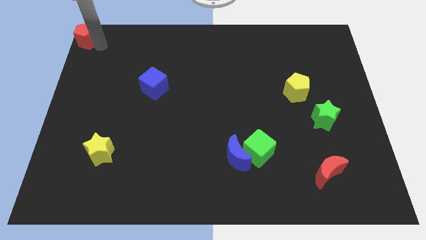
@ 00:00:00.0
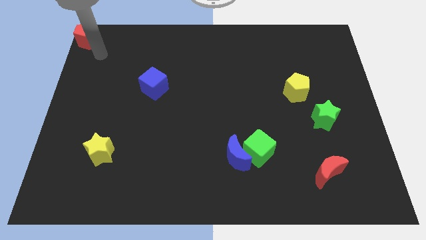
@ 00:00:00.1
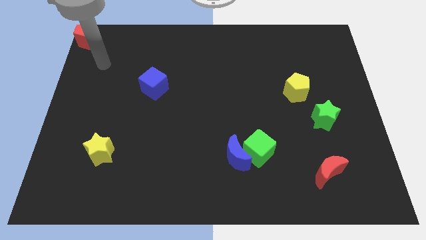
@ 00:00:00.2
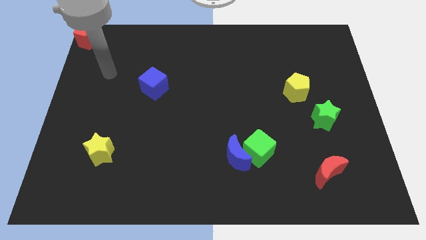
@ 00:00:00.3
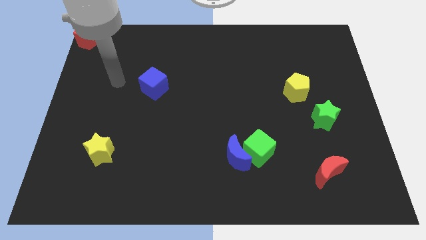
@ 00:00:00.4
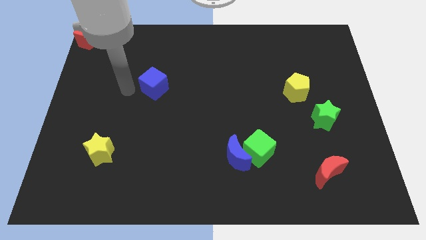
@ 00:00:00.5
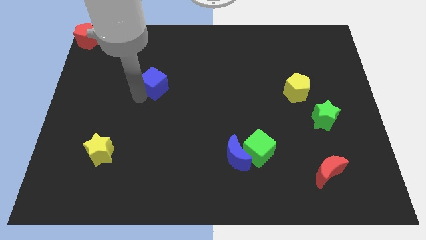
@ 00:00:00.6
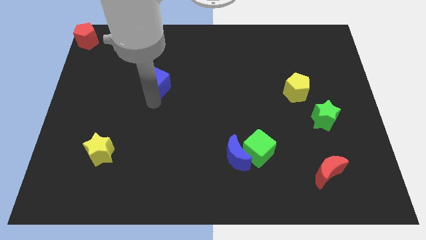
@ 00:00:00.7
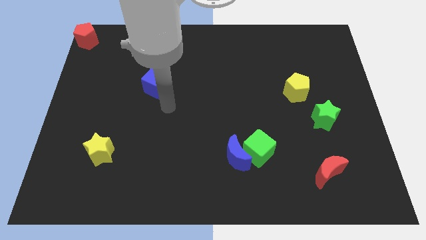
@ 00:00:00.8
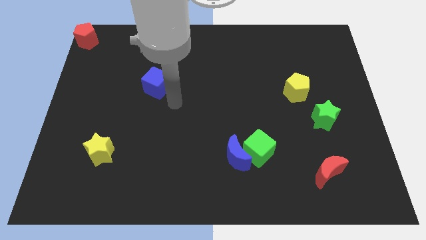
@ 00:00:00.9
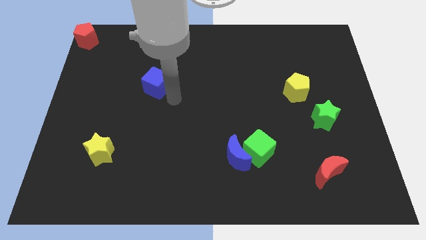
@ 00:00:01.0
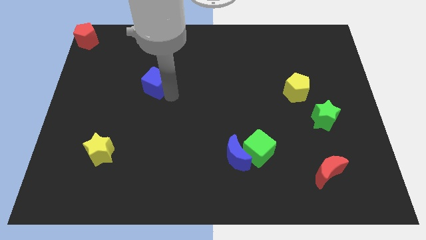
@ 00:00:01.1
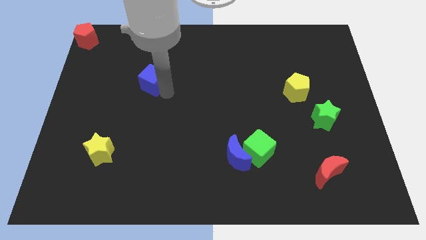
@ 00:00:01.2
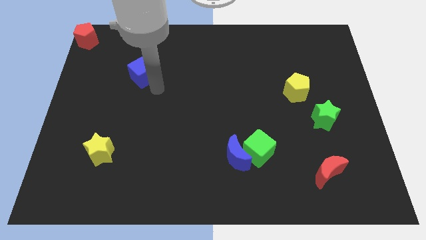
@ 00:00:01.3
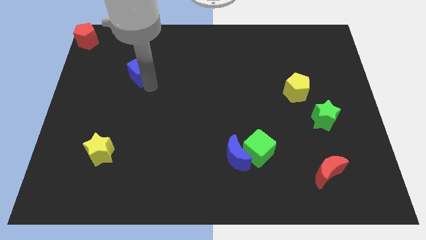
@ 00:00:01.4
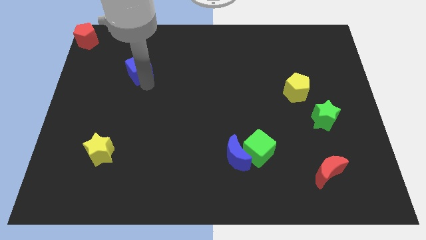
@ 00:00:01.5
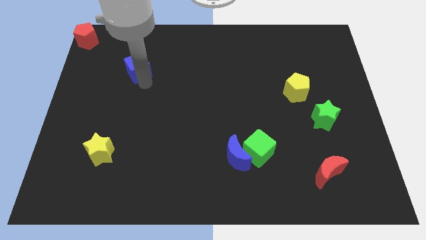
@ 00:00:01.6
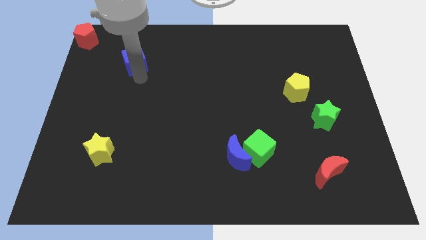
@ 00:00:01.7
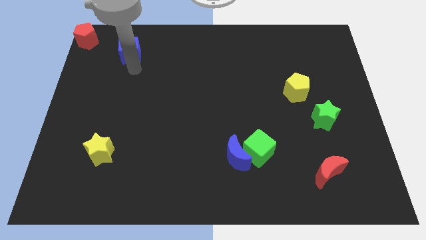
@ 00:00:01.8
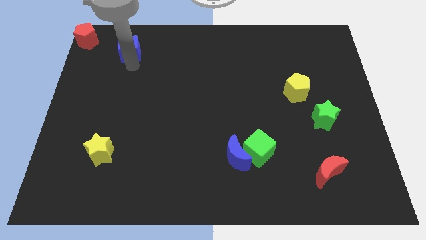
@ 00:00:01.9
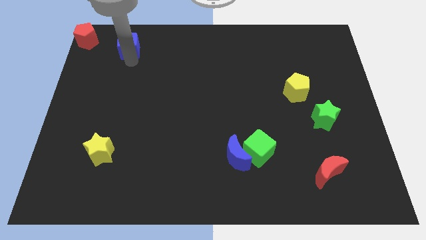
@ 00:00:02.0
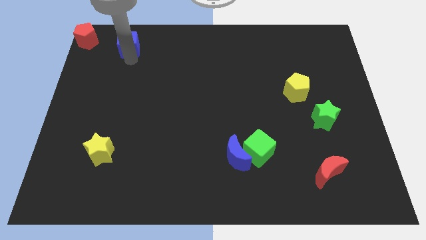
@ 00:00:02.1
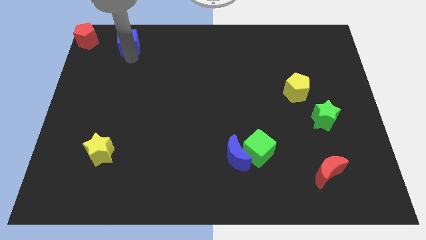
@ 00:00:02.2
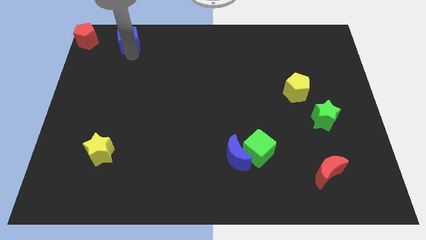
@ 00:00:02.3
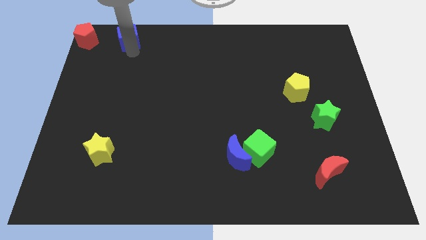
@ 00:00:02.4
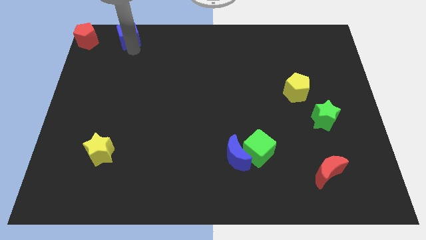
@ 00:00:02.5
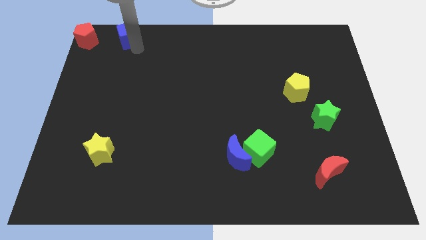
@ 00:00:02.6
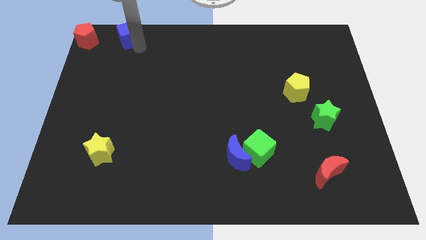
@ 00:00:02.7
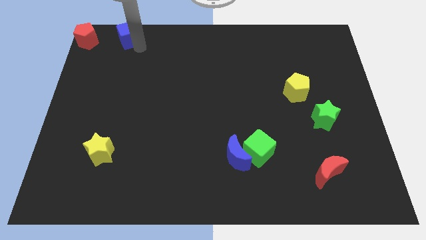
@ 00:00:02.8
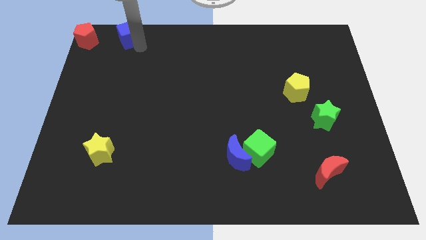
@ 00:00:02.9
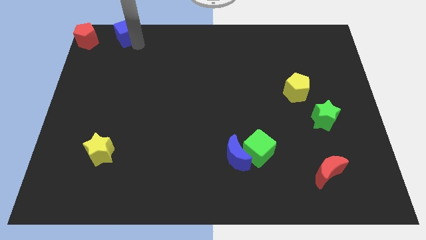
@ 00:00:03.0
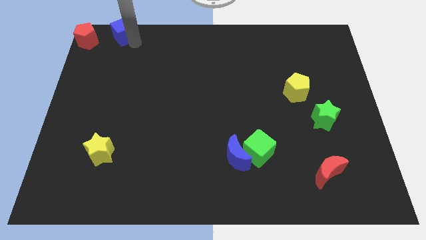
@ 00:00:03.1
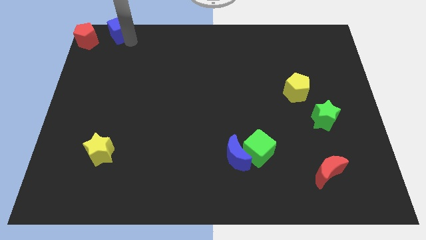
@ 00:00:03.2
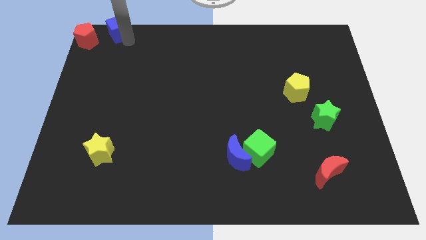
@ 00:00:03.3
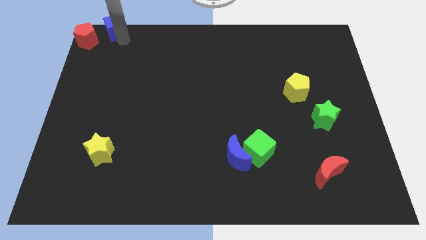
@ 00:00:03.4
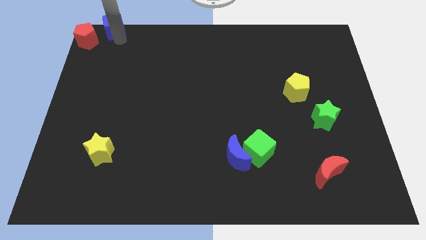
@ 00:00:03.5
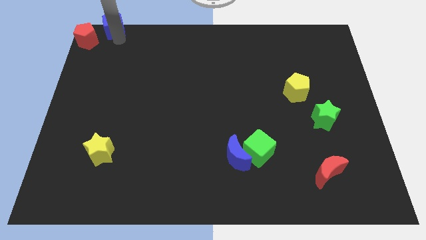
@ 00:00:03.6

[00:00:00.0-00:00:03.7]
move the blue cube towards the right side of the red pentagon

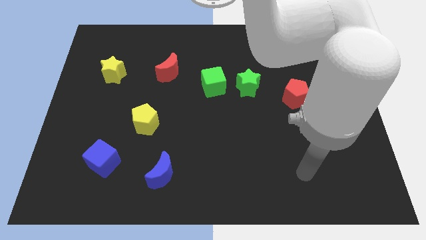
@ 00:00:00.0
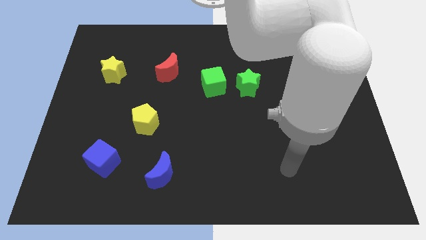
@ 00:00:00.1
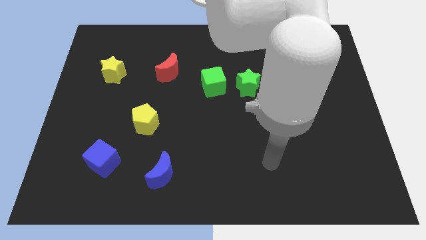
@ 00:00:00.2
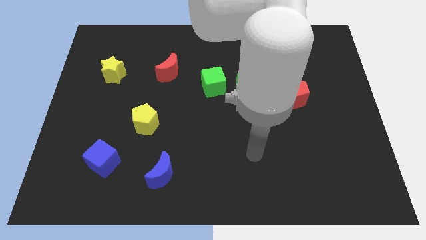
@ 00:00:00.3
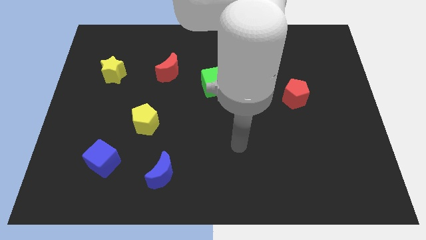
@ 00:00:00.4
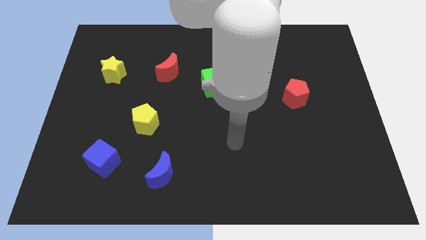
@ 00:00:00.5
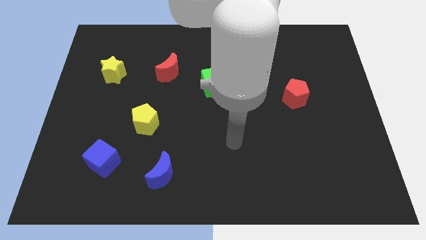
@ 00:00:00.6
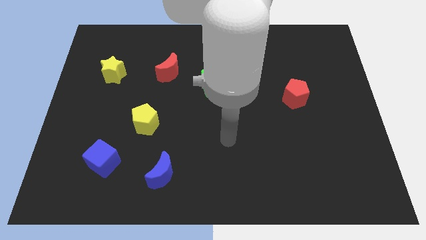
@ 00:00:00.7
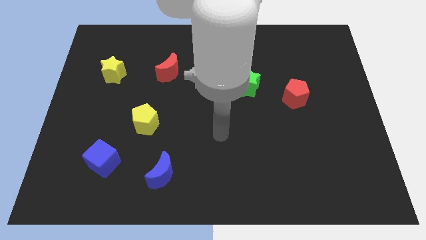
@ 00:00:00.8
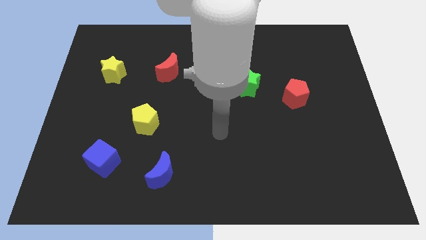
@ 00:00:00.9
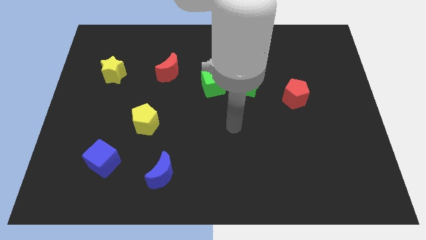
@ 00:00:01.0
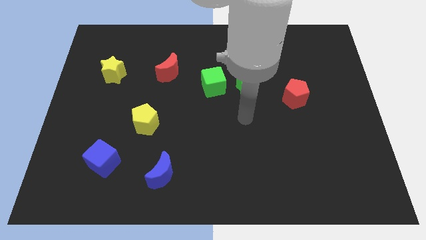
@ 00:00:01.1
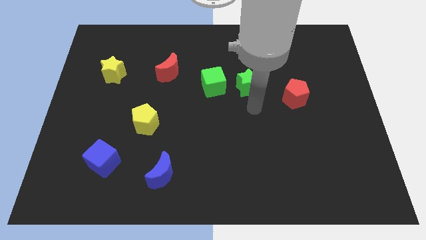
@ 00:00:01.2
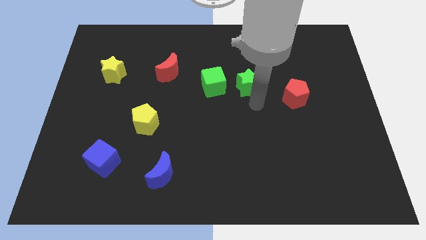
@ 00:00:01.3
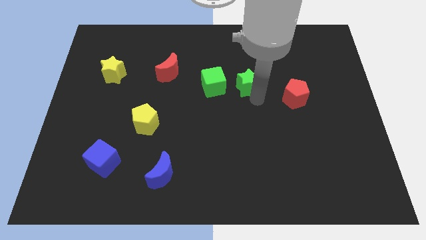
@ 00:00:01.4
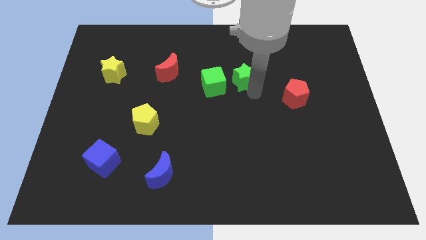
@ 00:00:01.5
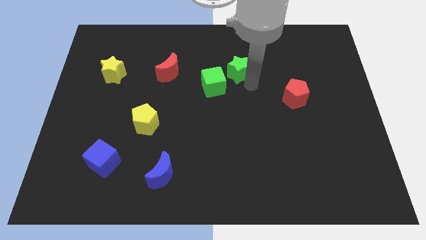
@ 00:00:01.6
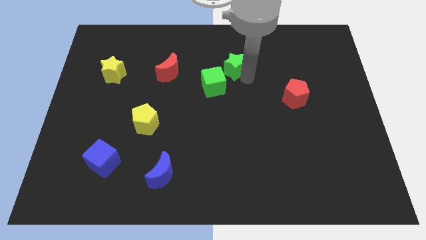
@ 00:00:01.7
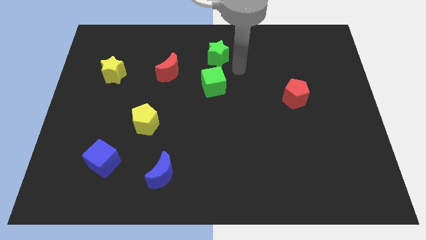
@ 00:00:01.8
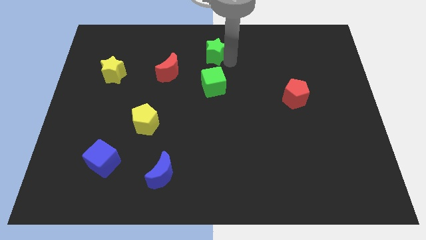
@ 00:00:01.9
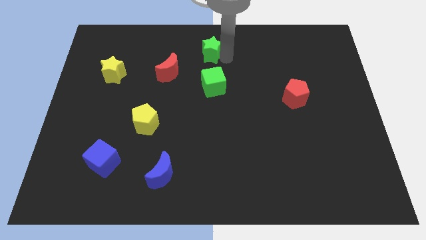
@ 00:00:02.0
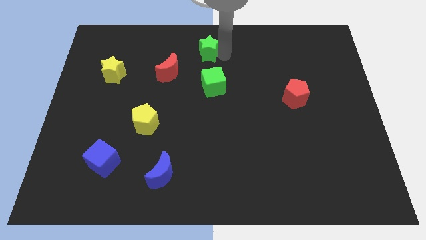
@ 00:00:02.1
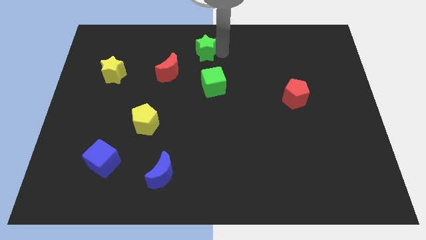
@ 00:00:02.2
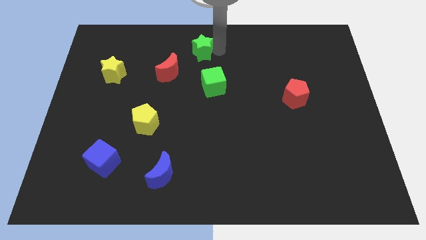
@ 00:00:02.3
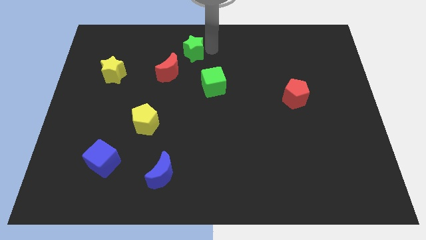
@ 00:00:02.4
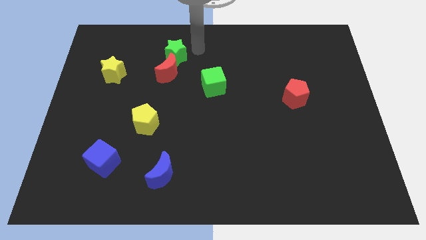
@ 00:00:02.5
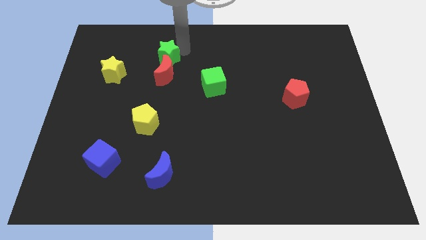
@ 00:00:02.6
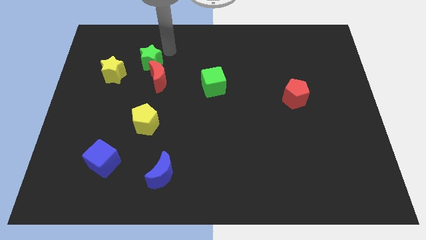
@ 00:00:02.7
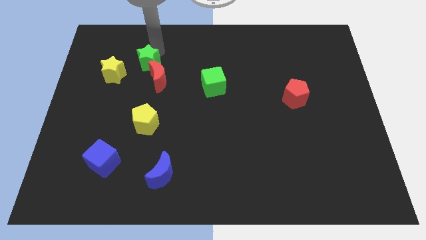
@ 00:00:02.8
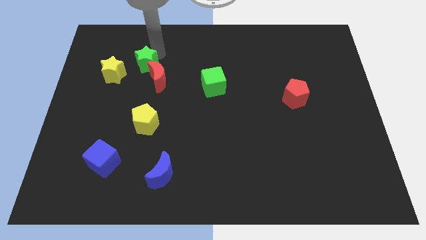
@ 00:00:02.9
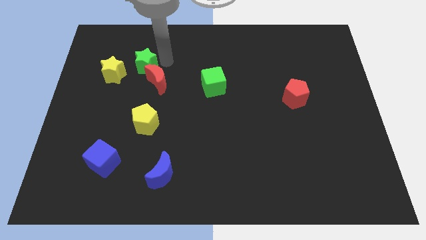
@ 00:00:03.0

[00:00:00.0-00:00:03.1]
move the green star to the right of the yellow star

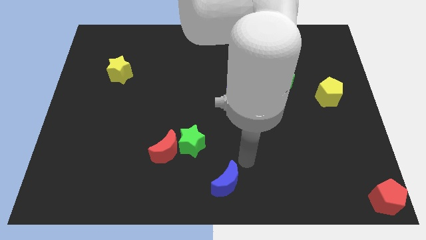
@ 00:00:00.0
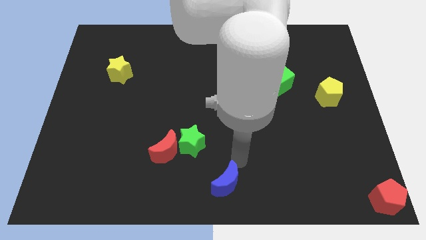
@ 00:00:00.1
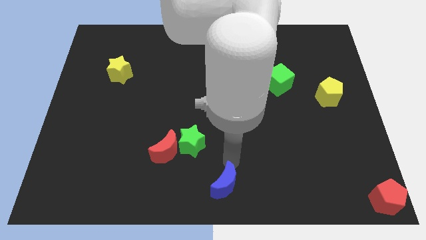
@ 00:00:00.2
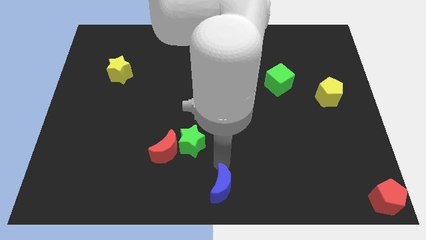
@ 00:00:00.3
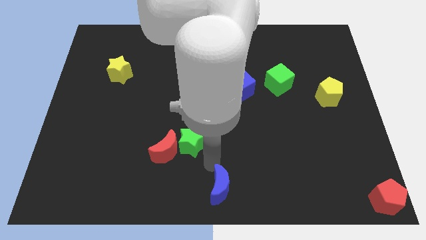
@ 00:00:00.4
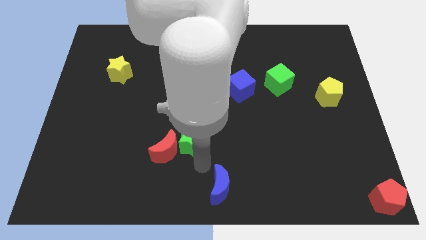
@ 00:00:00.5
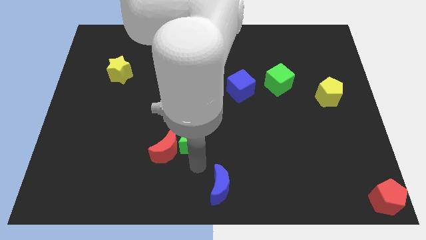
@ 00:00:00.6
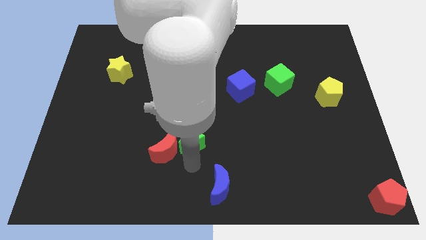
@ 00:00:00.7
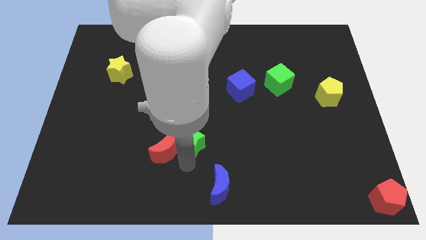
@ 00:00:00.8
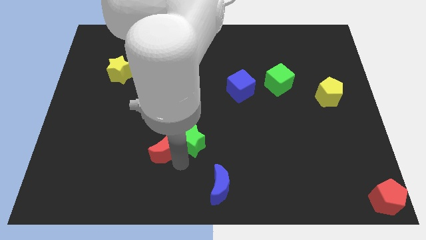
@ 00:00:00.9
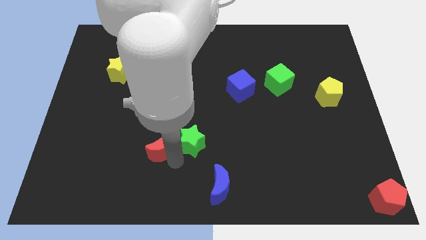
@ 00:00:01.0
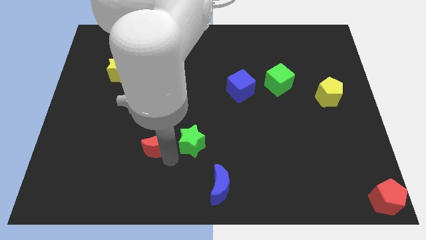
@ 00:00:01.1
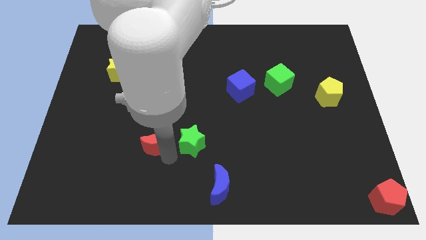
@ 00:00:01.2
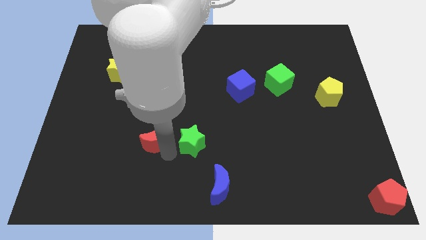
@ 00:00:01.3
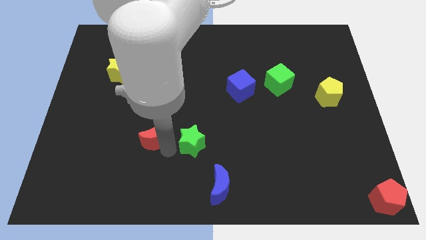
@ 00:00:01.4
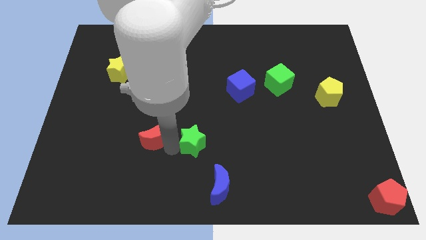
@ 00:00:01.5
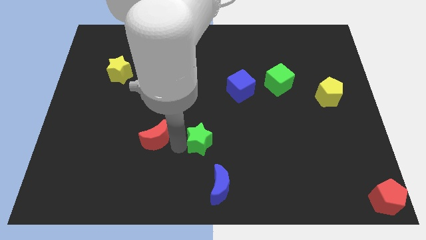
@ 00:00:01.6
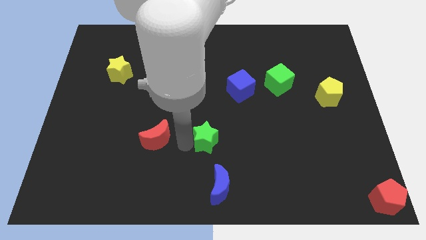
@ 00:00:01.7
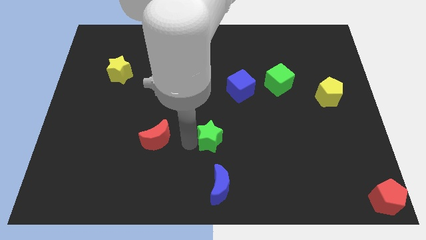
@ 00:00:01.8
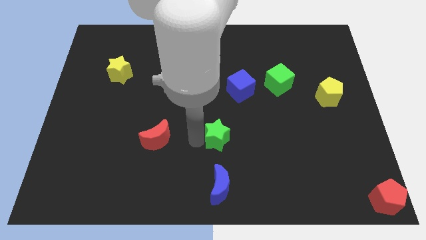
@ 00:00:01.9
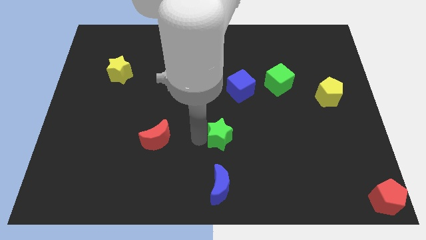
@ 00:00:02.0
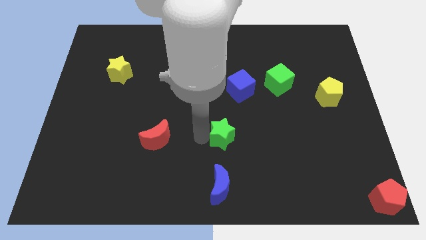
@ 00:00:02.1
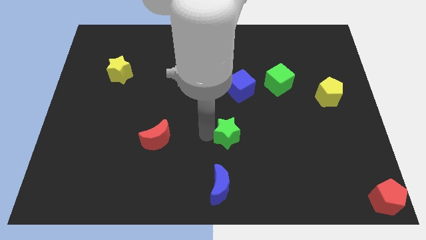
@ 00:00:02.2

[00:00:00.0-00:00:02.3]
separate the red moon and green star
